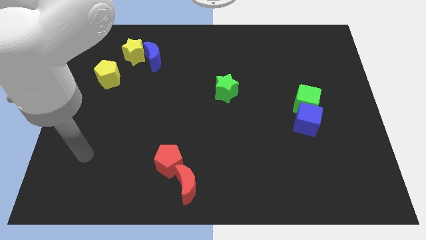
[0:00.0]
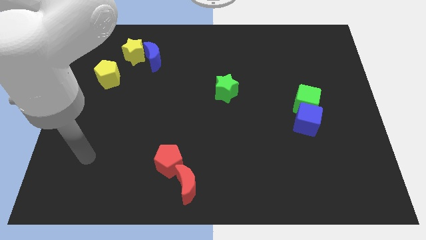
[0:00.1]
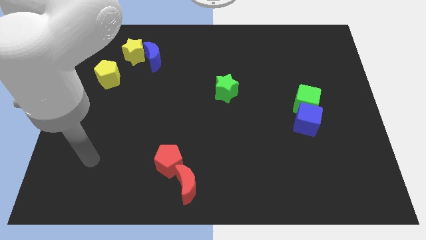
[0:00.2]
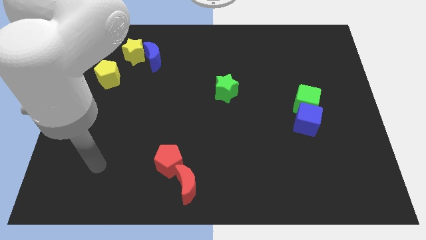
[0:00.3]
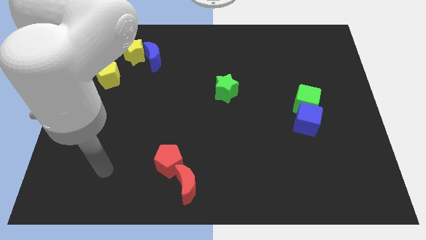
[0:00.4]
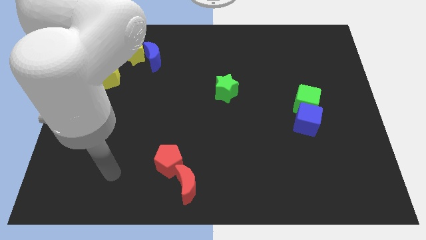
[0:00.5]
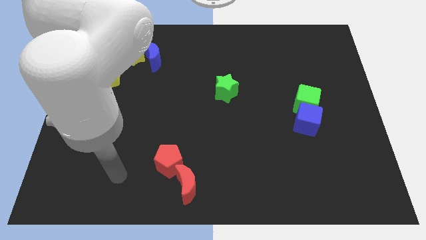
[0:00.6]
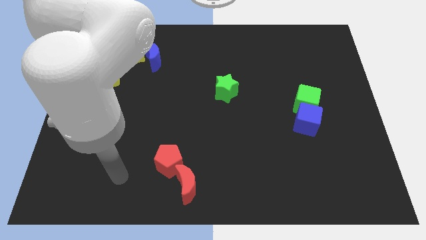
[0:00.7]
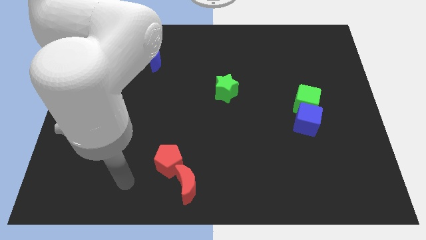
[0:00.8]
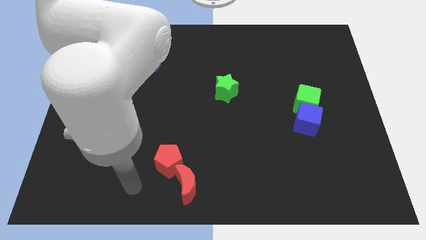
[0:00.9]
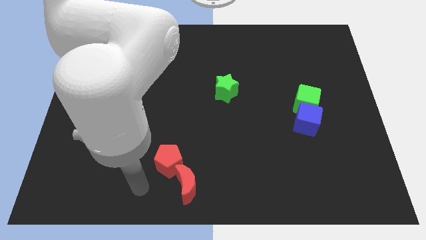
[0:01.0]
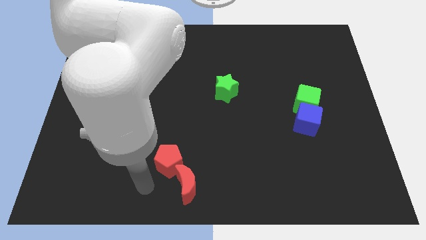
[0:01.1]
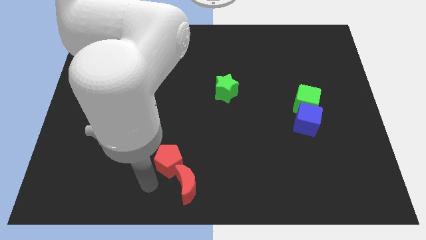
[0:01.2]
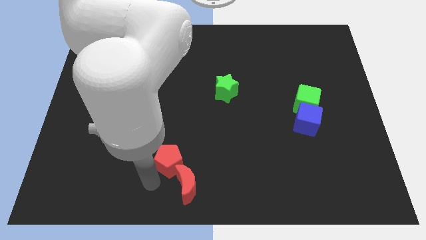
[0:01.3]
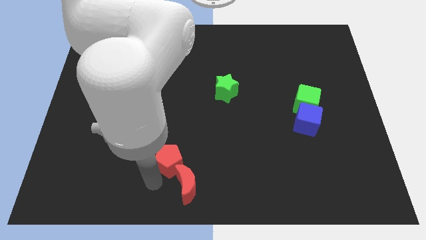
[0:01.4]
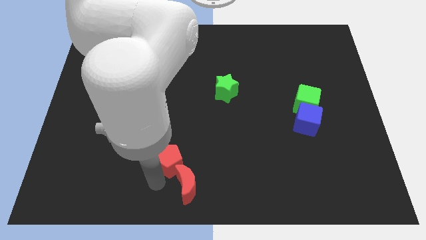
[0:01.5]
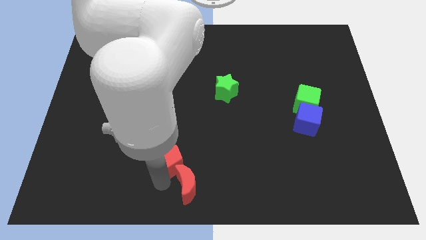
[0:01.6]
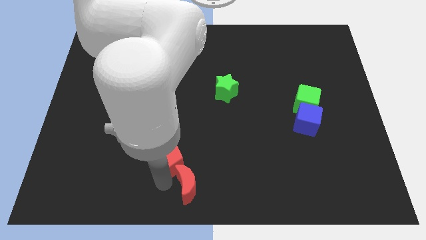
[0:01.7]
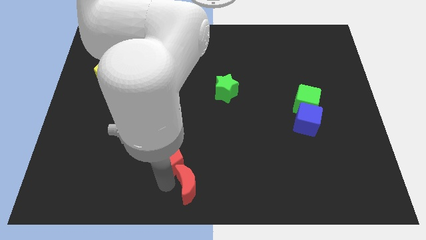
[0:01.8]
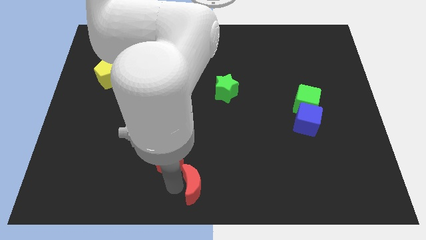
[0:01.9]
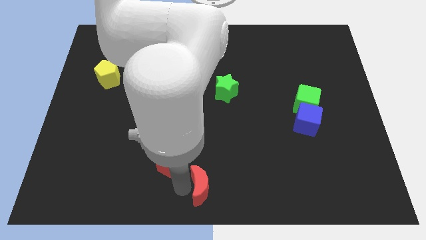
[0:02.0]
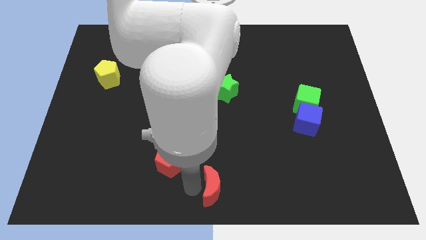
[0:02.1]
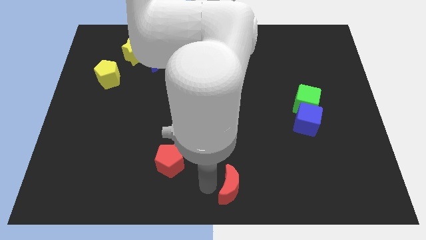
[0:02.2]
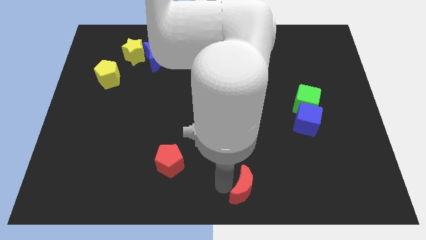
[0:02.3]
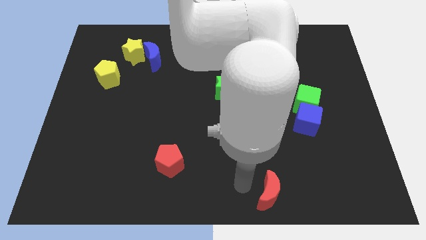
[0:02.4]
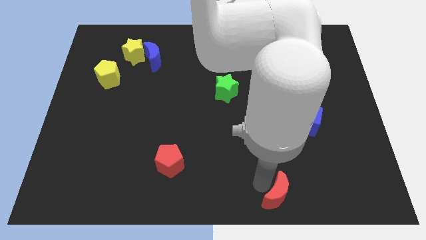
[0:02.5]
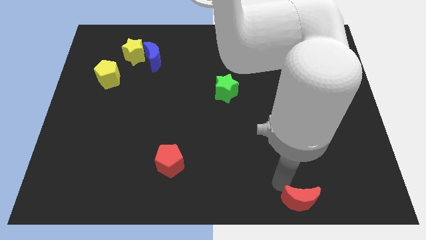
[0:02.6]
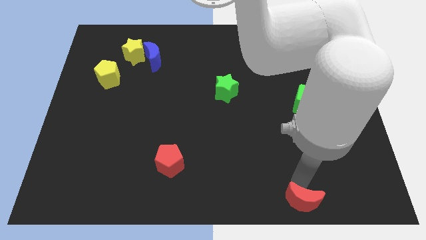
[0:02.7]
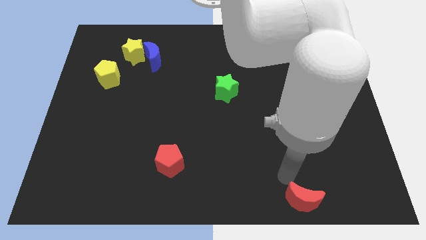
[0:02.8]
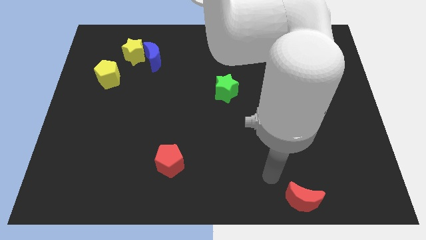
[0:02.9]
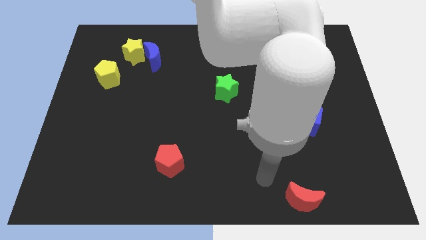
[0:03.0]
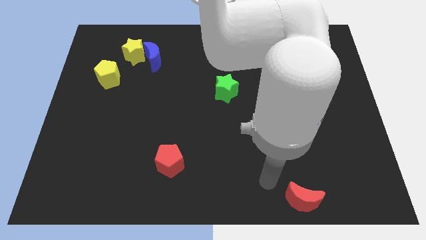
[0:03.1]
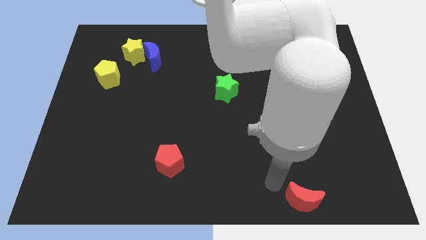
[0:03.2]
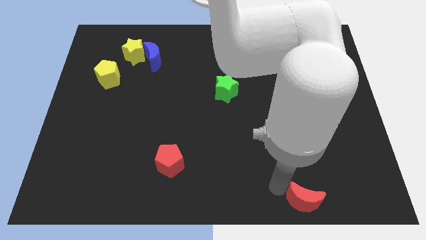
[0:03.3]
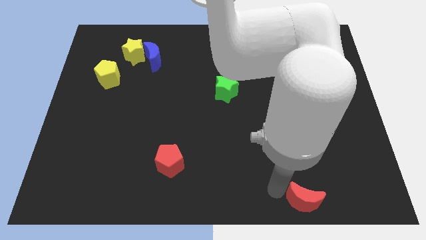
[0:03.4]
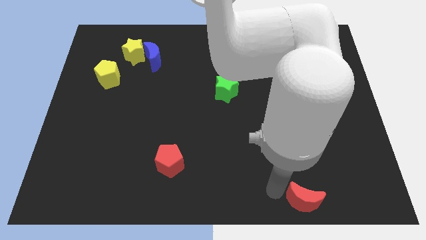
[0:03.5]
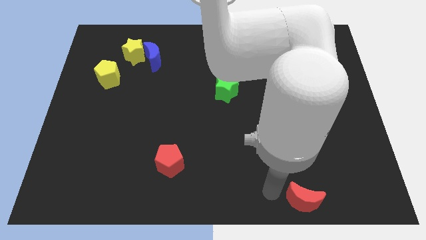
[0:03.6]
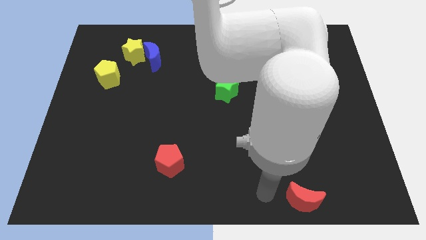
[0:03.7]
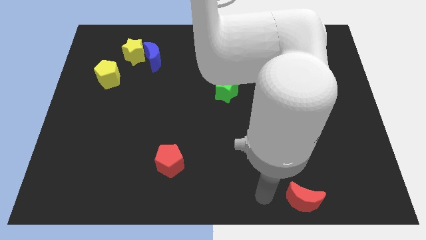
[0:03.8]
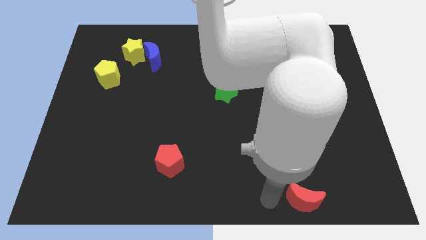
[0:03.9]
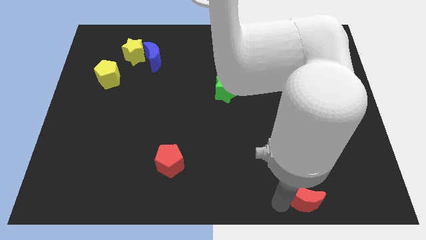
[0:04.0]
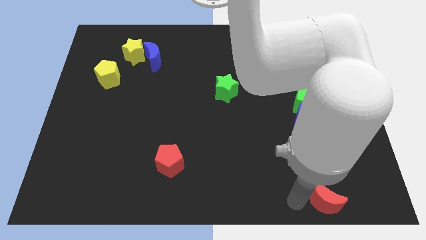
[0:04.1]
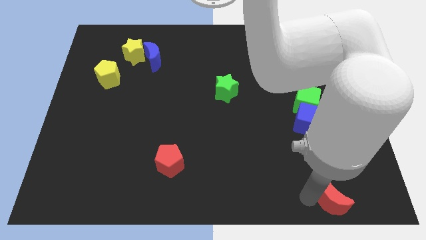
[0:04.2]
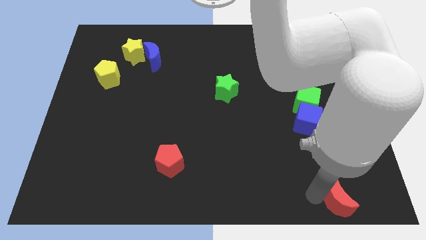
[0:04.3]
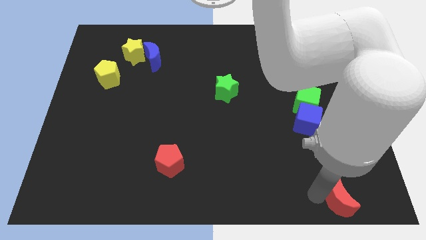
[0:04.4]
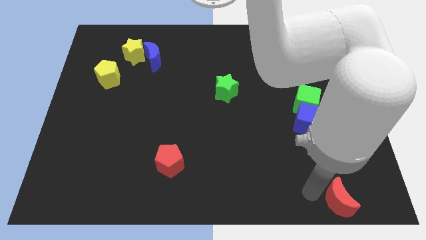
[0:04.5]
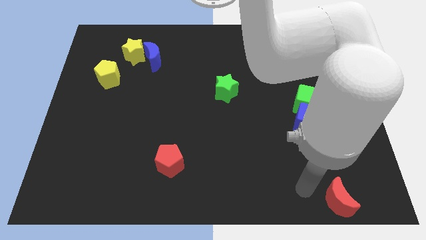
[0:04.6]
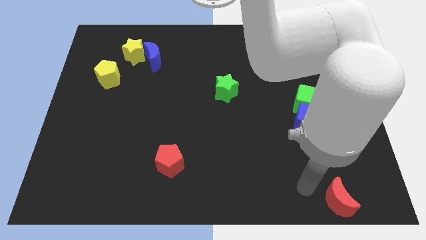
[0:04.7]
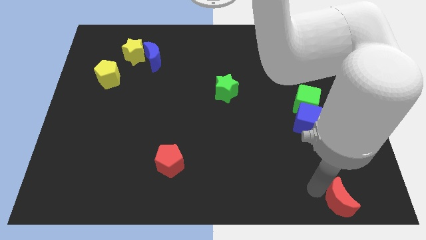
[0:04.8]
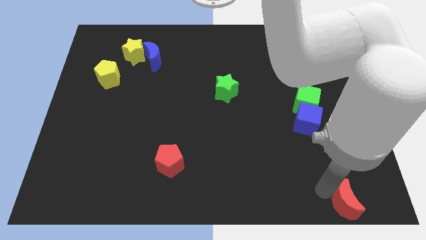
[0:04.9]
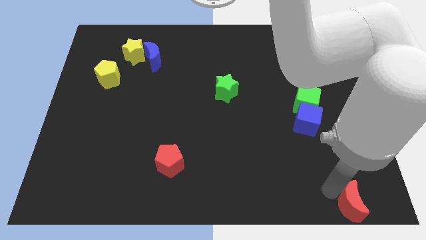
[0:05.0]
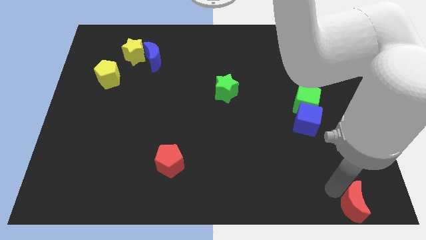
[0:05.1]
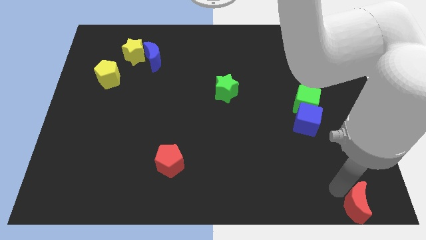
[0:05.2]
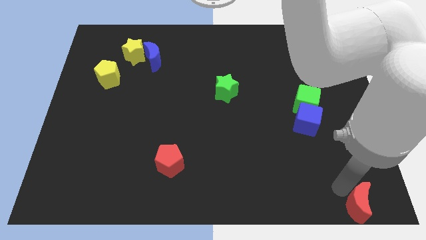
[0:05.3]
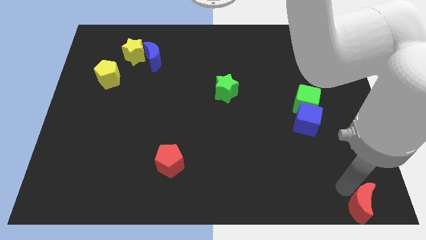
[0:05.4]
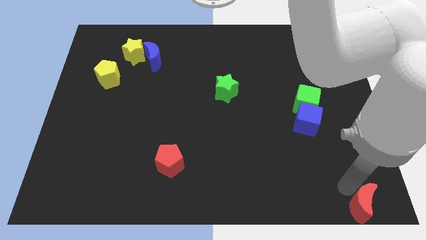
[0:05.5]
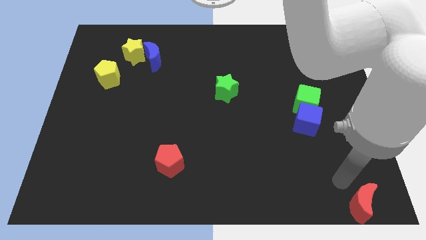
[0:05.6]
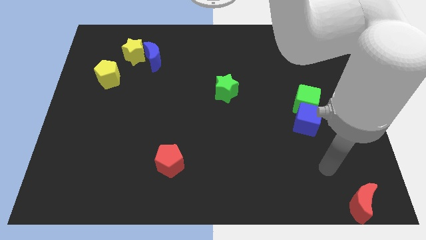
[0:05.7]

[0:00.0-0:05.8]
push the red crescent to the bottom right of the board

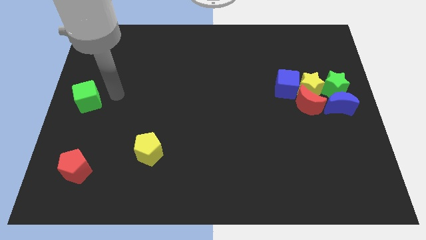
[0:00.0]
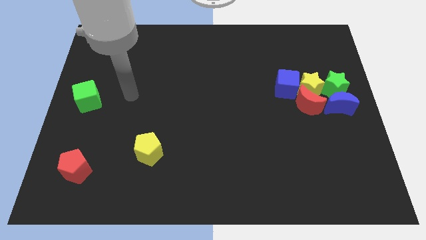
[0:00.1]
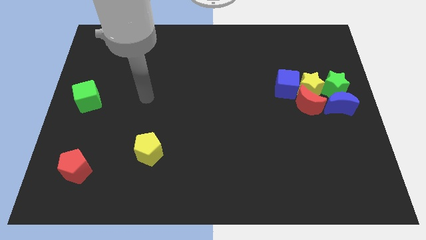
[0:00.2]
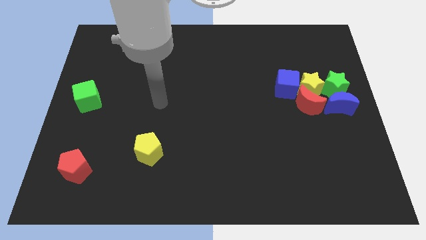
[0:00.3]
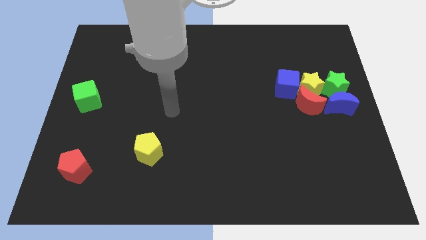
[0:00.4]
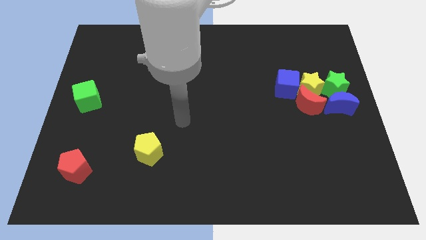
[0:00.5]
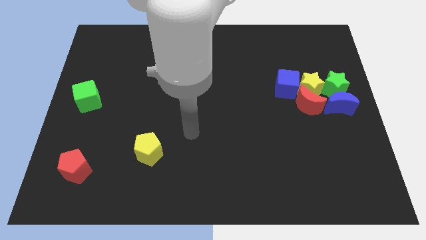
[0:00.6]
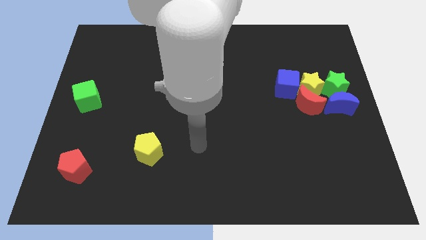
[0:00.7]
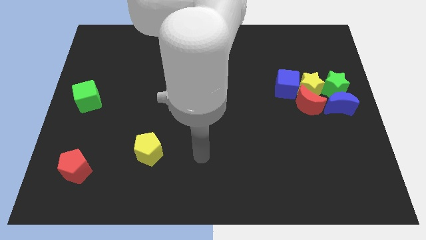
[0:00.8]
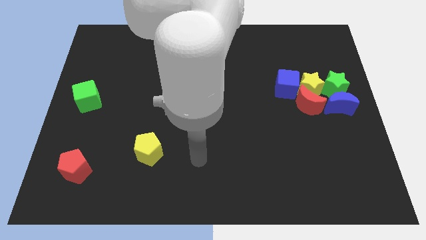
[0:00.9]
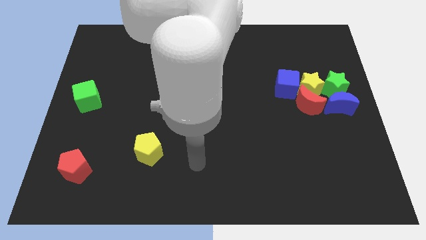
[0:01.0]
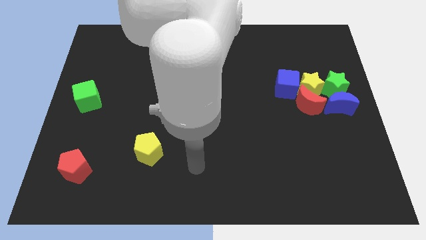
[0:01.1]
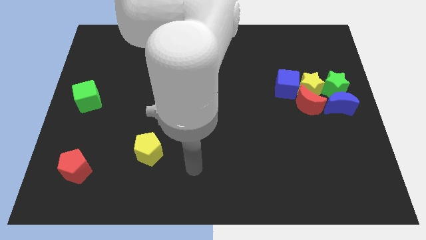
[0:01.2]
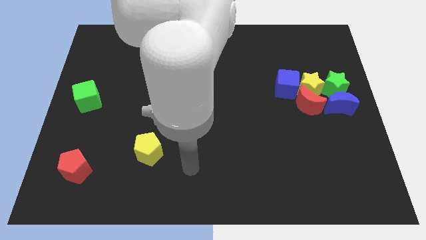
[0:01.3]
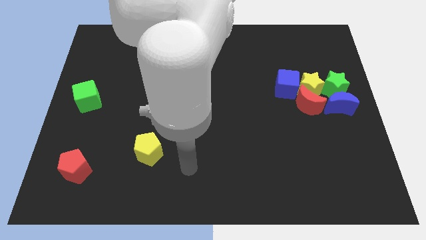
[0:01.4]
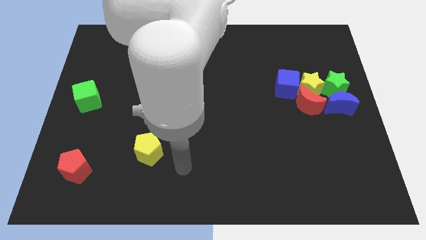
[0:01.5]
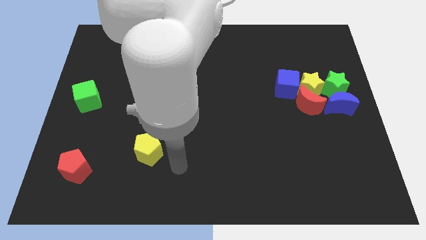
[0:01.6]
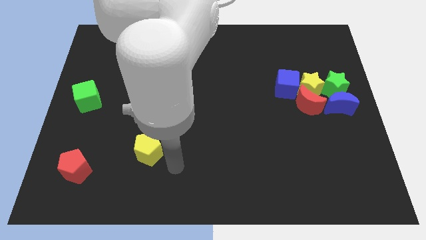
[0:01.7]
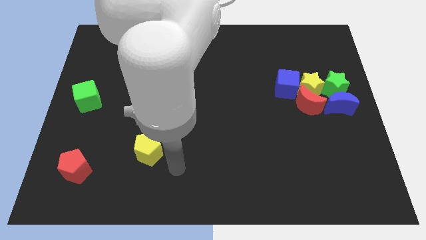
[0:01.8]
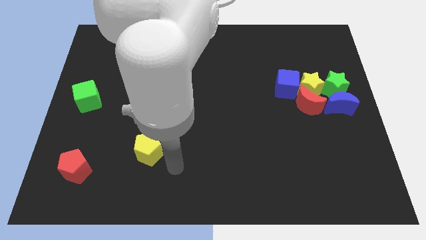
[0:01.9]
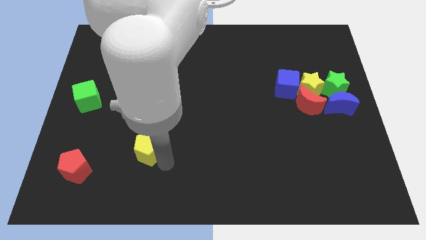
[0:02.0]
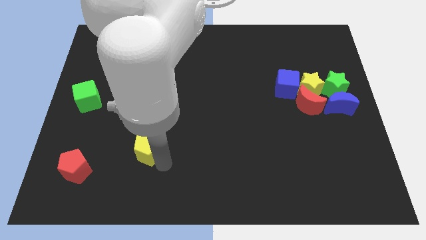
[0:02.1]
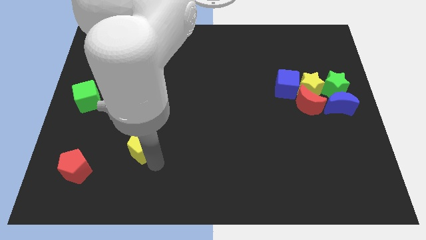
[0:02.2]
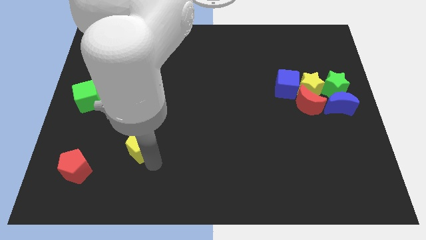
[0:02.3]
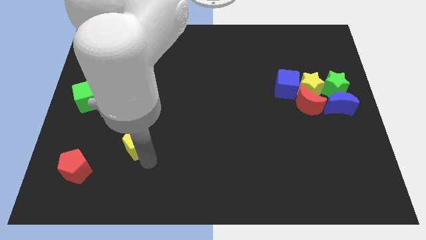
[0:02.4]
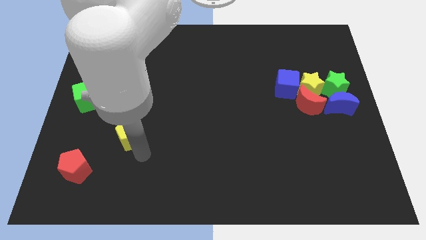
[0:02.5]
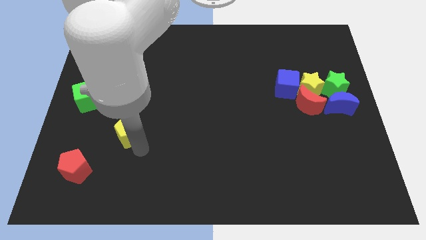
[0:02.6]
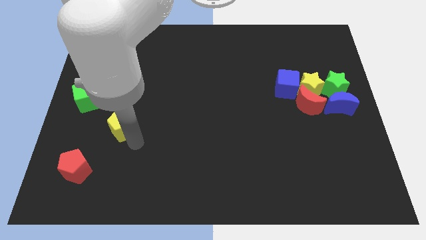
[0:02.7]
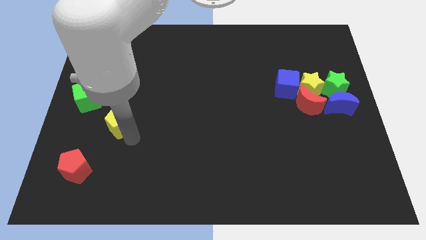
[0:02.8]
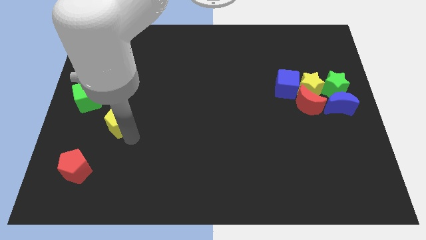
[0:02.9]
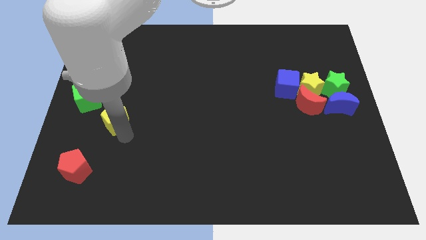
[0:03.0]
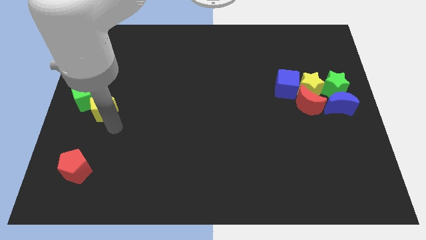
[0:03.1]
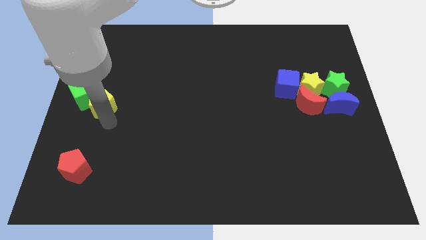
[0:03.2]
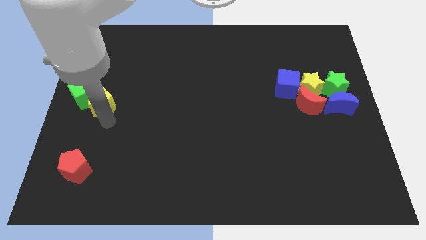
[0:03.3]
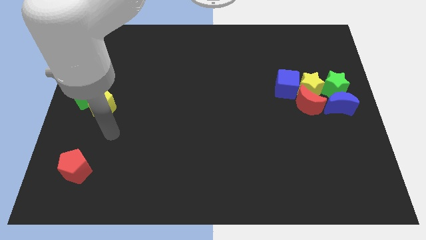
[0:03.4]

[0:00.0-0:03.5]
push the yellow pentagon into the right side of the green cube
